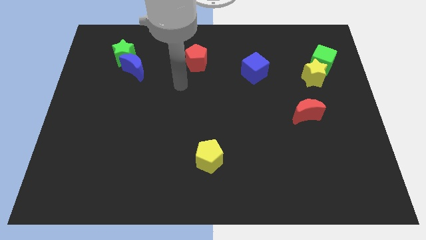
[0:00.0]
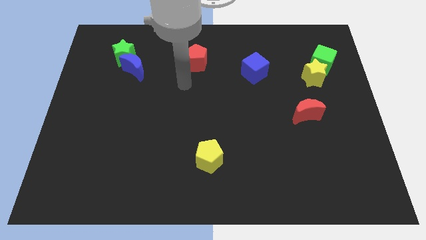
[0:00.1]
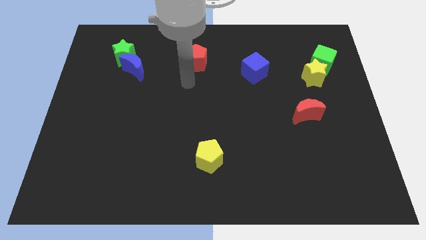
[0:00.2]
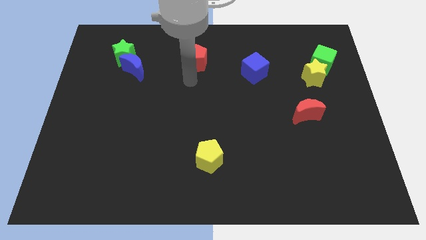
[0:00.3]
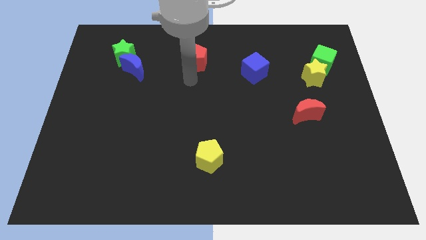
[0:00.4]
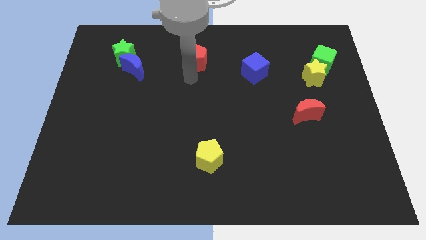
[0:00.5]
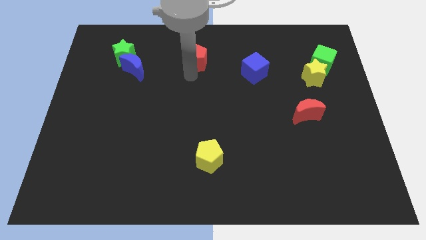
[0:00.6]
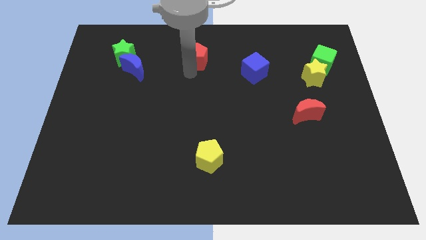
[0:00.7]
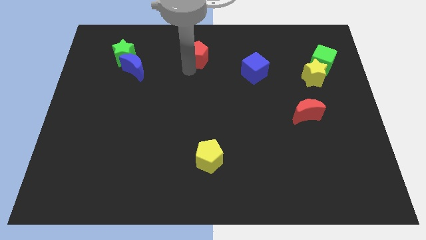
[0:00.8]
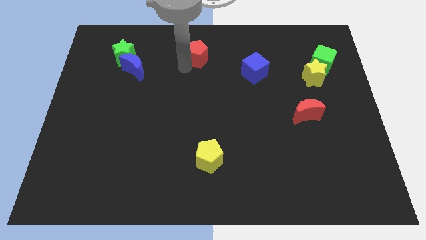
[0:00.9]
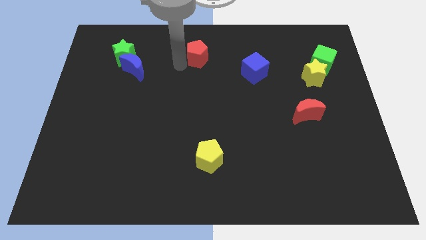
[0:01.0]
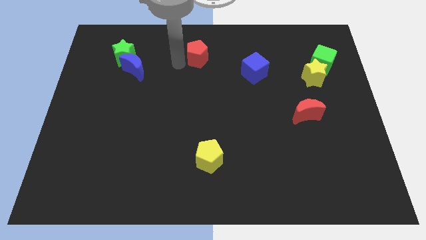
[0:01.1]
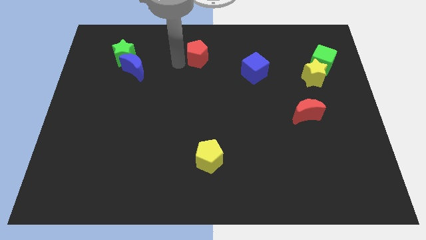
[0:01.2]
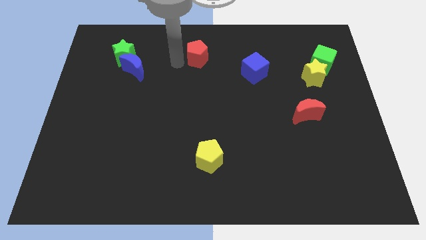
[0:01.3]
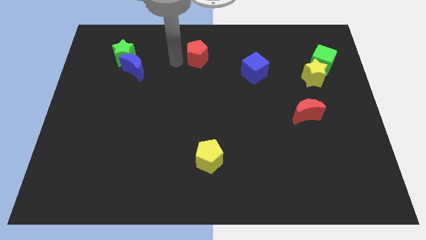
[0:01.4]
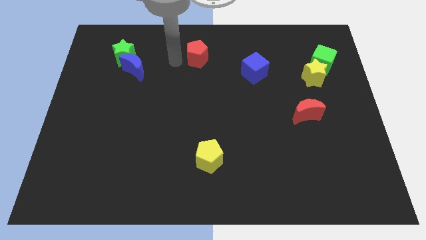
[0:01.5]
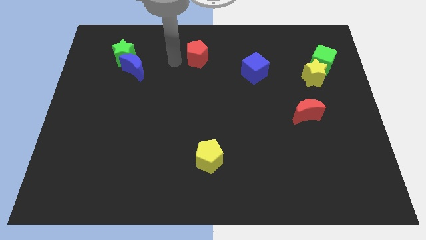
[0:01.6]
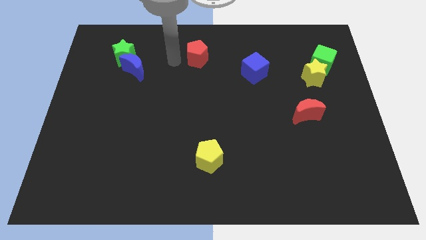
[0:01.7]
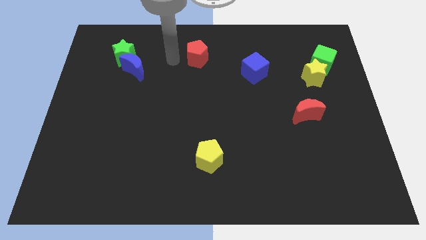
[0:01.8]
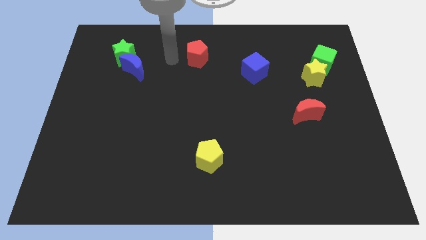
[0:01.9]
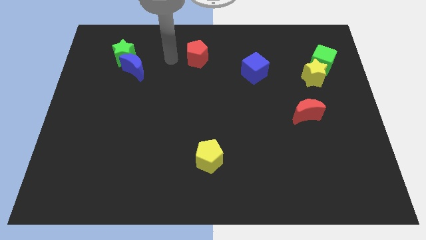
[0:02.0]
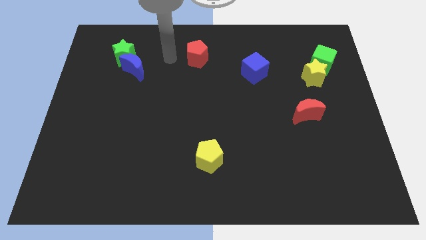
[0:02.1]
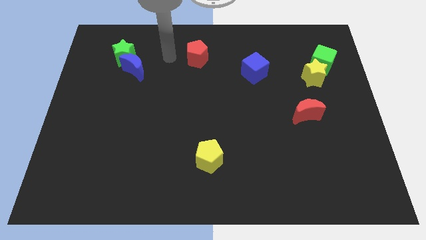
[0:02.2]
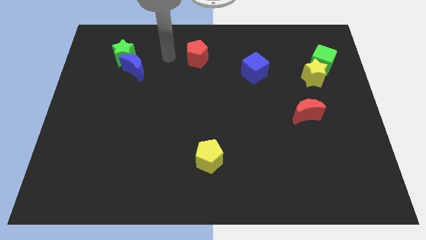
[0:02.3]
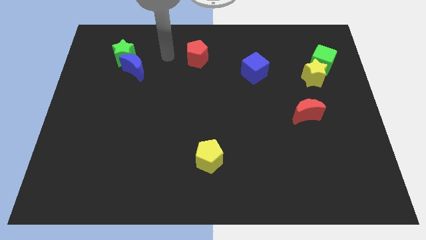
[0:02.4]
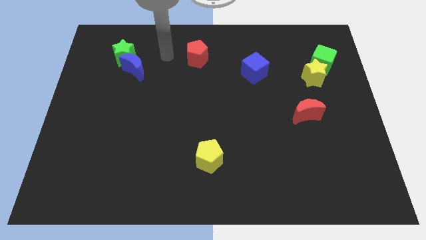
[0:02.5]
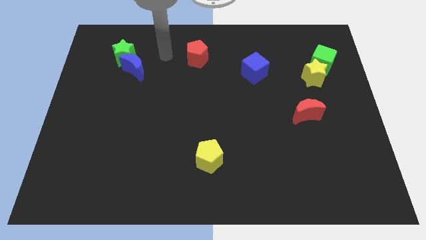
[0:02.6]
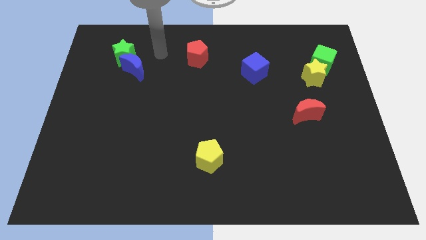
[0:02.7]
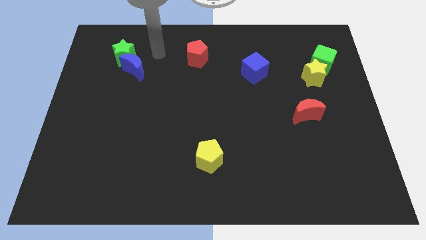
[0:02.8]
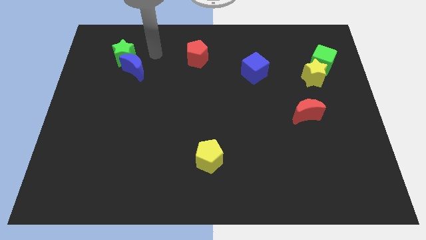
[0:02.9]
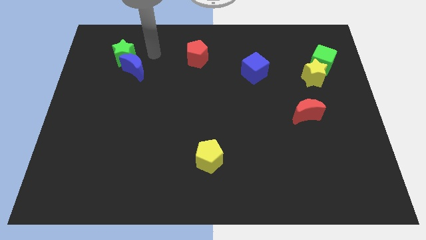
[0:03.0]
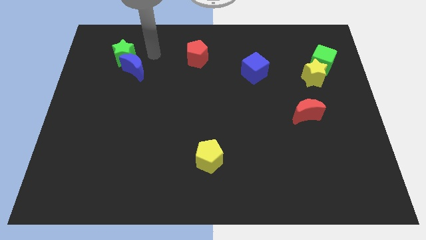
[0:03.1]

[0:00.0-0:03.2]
move the red pentagon slightly up

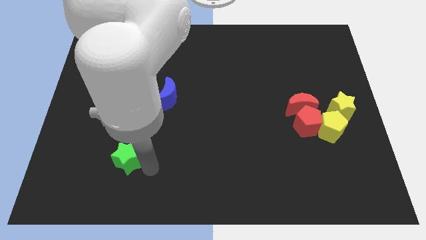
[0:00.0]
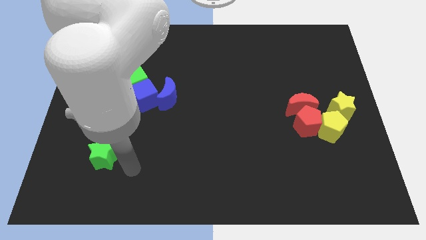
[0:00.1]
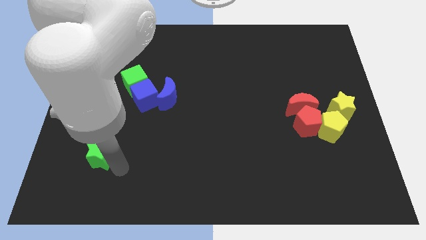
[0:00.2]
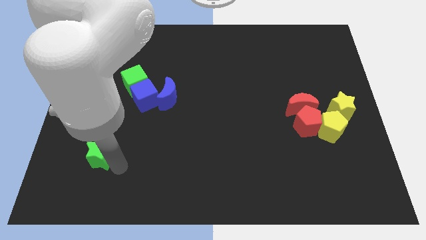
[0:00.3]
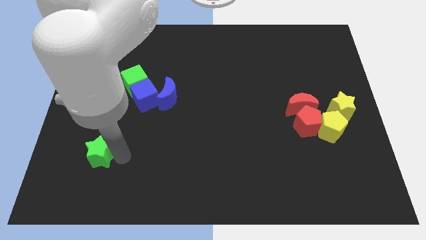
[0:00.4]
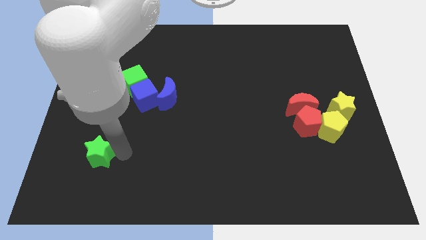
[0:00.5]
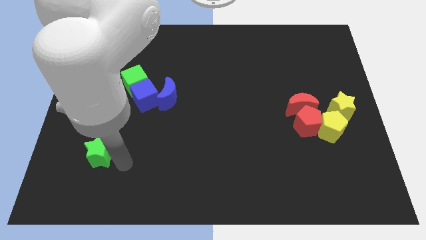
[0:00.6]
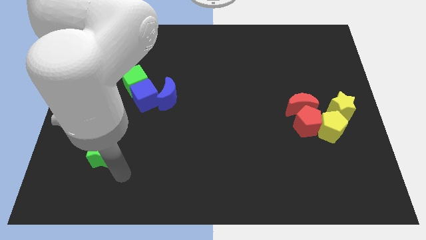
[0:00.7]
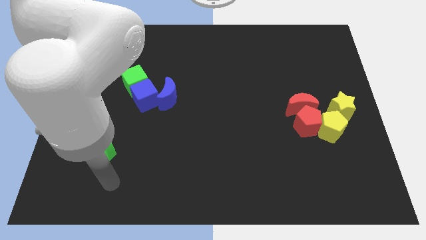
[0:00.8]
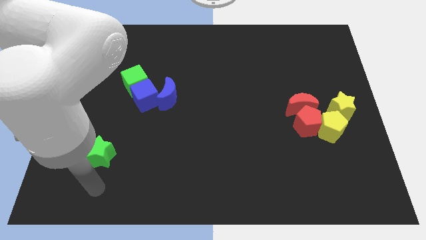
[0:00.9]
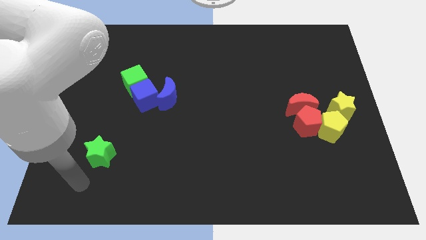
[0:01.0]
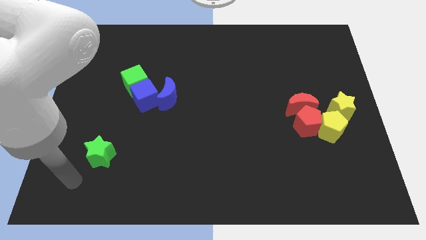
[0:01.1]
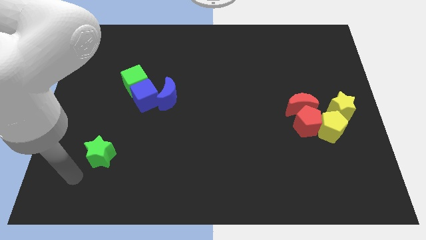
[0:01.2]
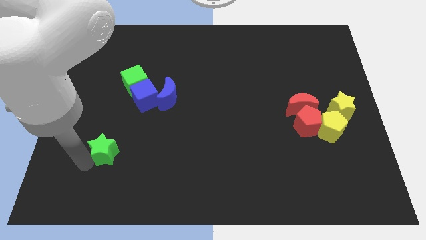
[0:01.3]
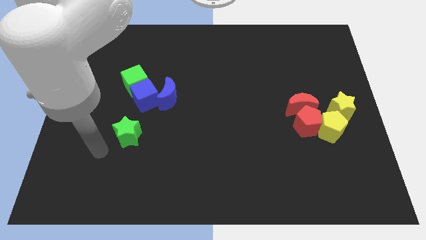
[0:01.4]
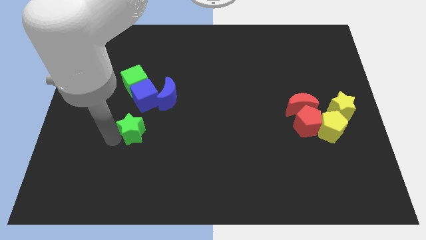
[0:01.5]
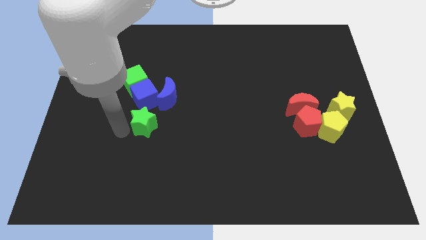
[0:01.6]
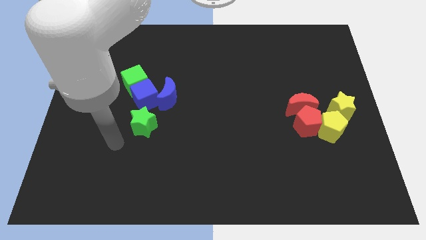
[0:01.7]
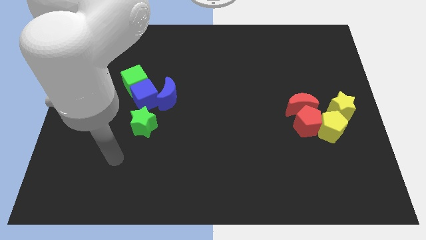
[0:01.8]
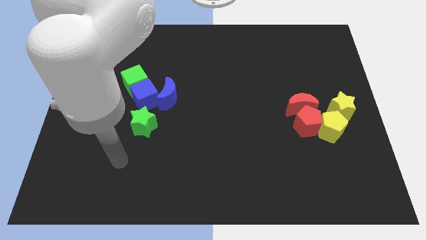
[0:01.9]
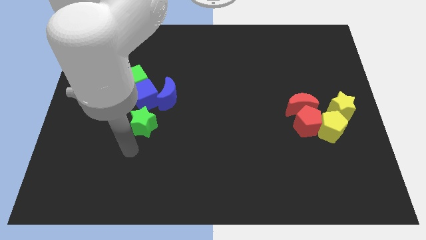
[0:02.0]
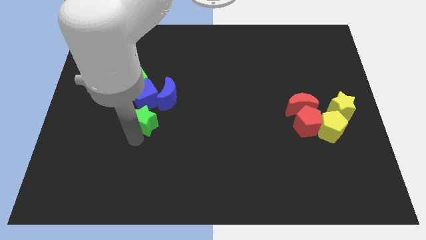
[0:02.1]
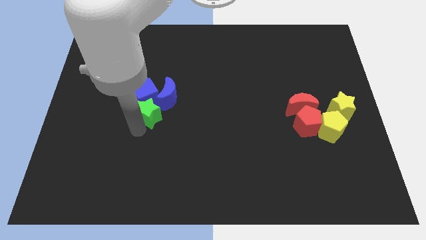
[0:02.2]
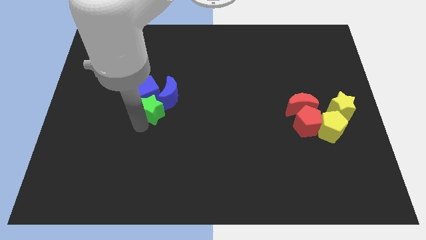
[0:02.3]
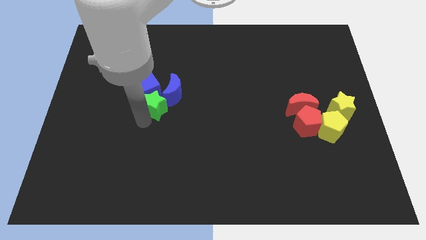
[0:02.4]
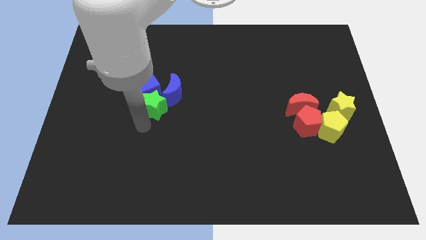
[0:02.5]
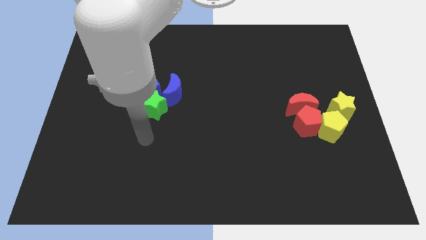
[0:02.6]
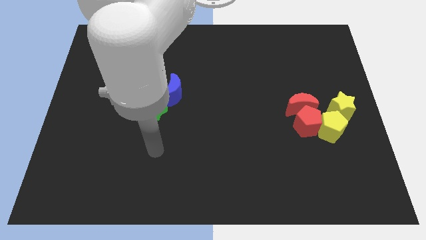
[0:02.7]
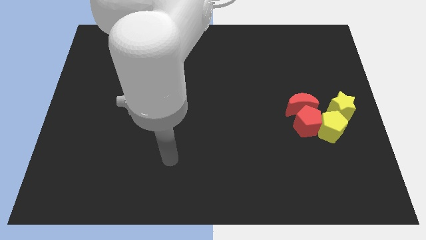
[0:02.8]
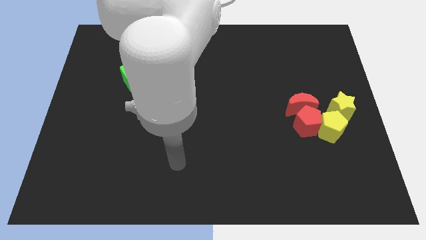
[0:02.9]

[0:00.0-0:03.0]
push the green star diagonal to the blue moon

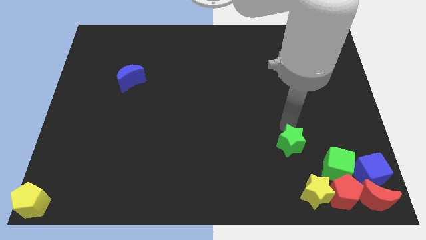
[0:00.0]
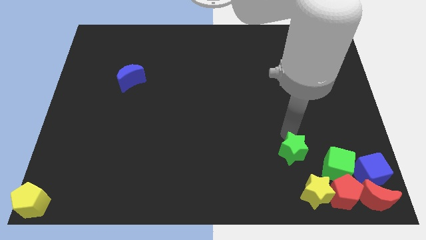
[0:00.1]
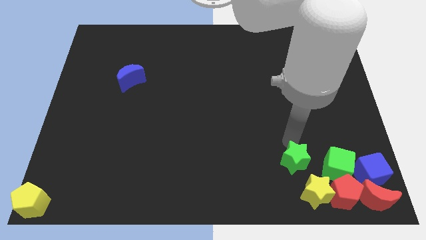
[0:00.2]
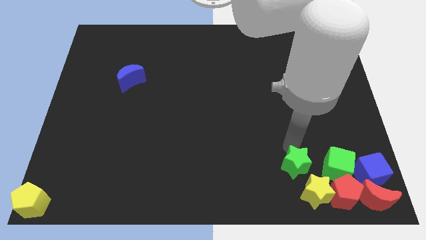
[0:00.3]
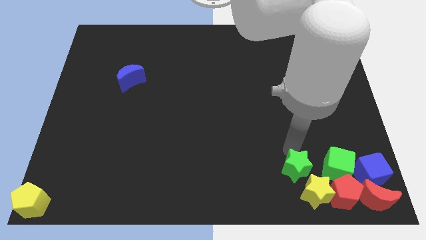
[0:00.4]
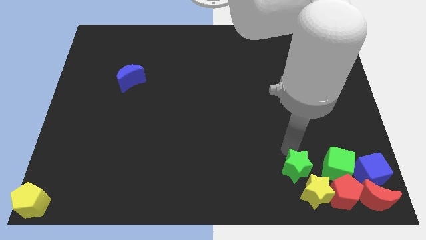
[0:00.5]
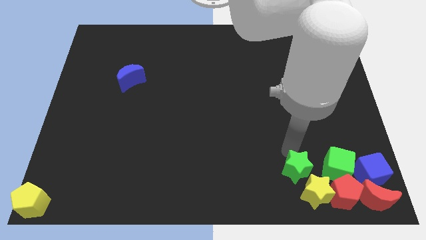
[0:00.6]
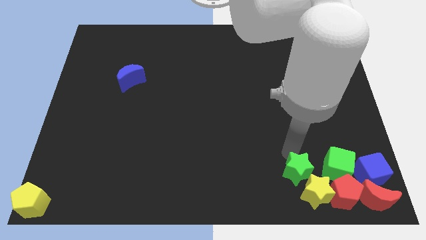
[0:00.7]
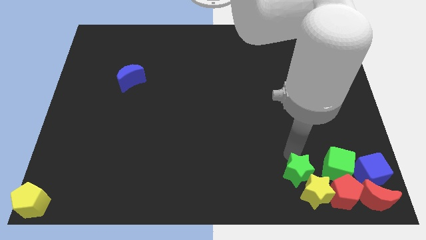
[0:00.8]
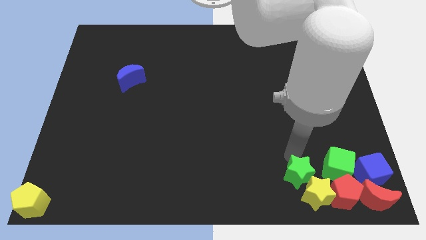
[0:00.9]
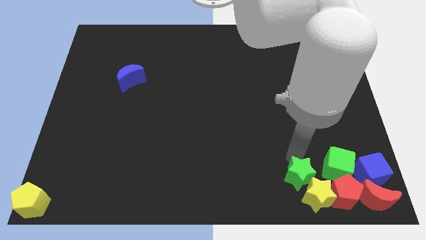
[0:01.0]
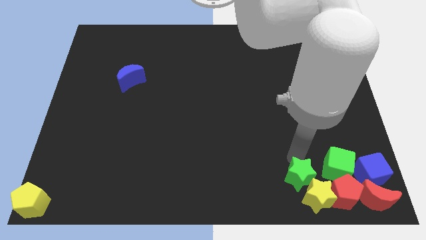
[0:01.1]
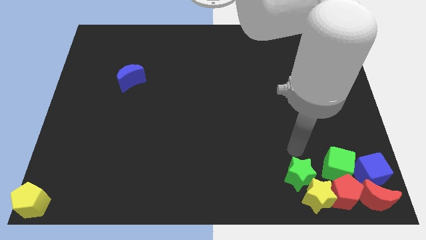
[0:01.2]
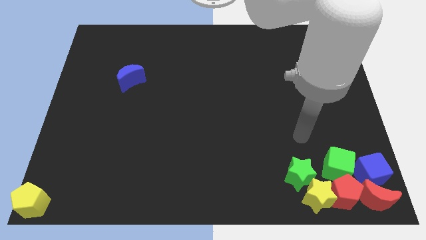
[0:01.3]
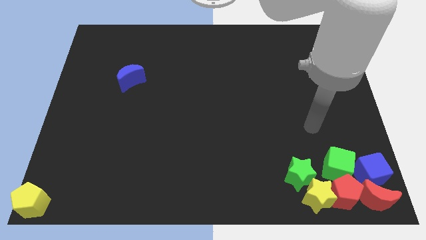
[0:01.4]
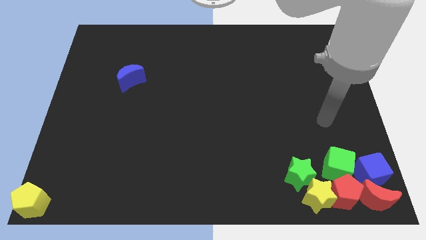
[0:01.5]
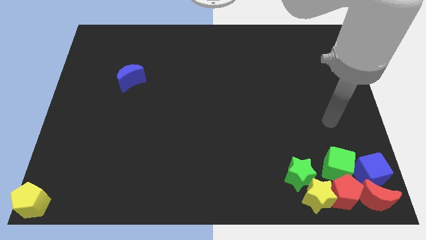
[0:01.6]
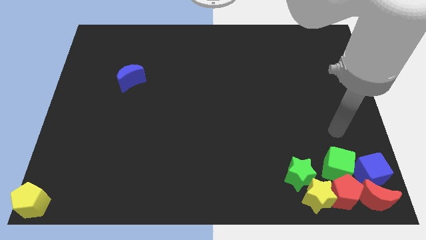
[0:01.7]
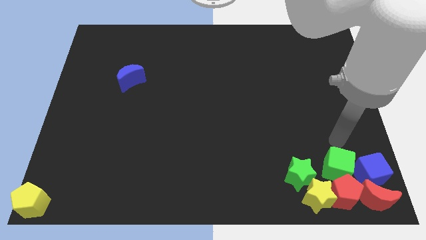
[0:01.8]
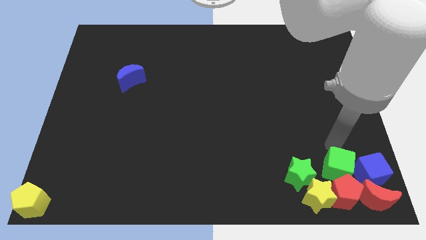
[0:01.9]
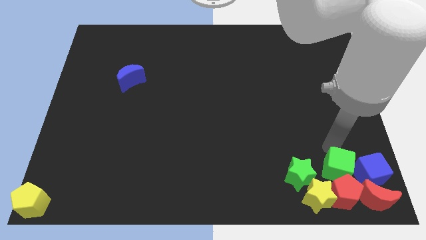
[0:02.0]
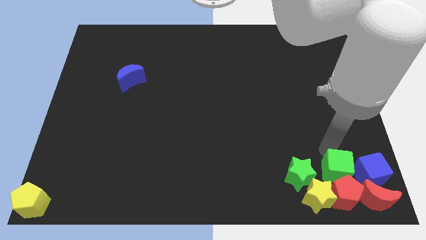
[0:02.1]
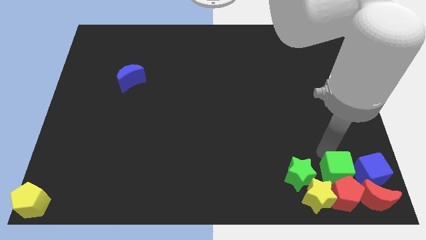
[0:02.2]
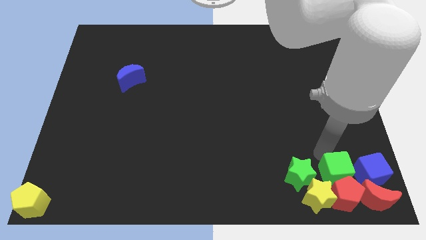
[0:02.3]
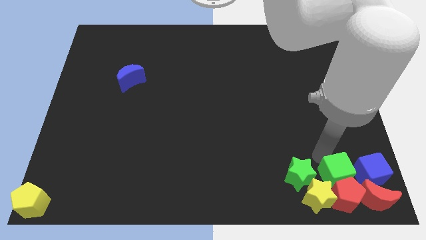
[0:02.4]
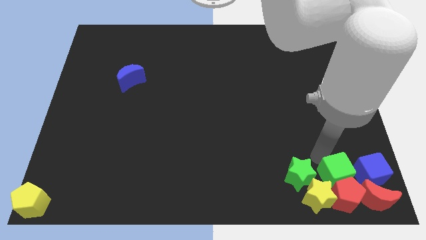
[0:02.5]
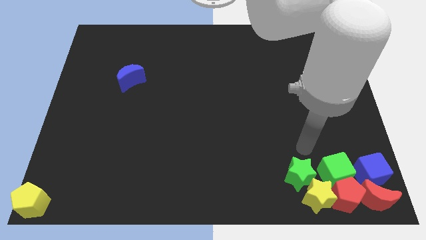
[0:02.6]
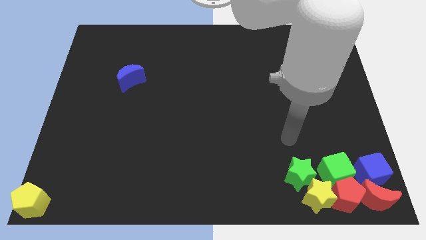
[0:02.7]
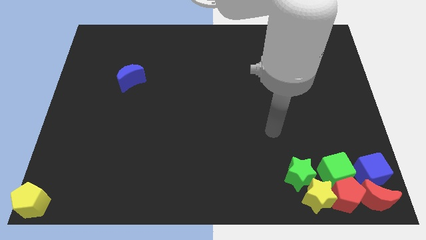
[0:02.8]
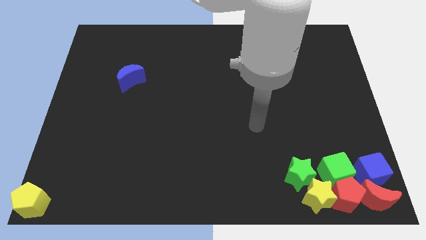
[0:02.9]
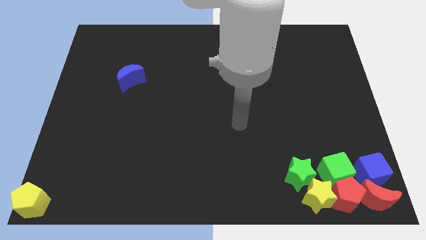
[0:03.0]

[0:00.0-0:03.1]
adjust the group of blocks at the bottom right corner of the board
